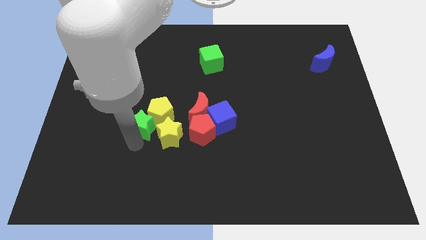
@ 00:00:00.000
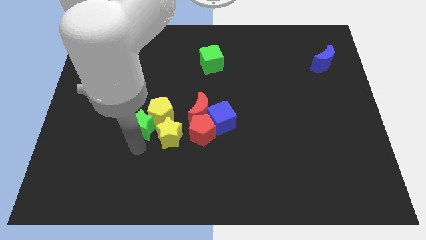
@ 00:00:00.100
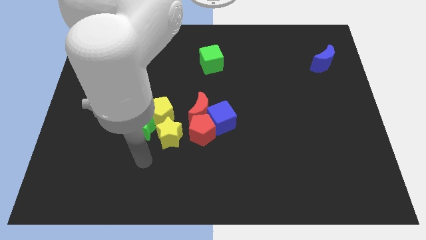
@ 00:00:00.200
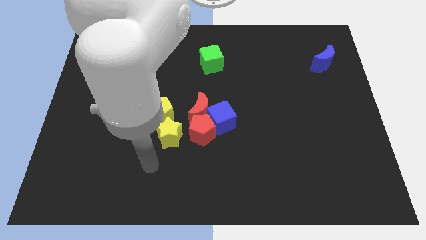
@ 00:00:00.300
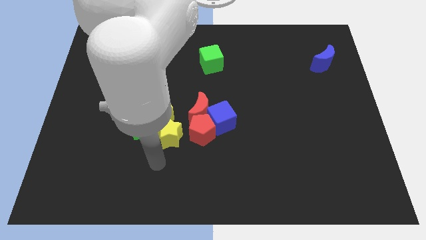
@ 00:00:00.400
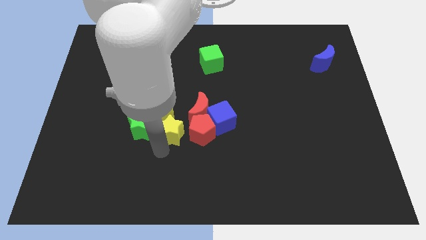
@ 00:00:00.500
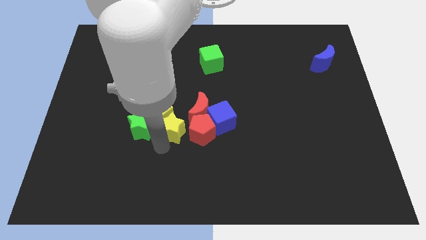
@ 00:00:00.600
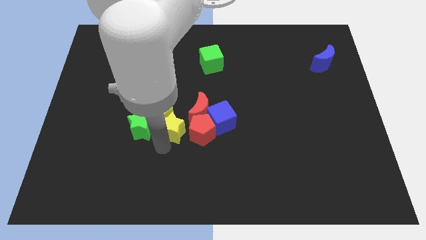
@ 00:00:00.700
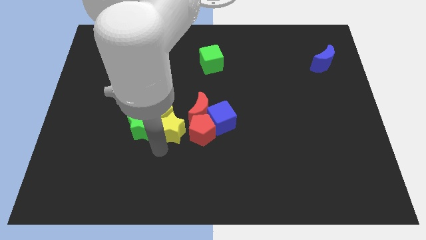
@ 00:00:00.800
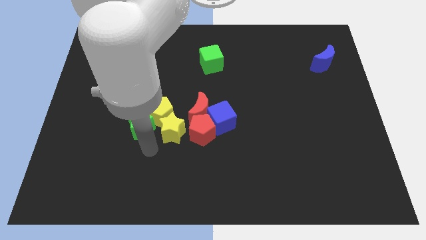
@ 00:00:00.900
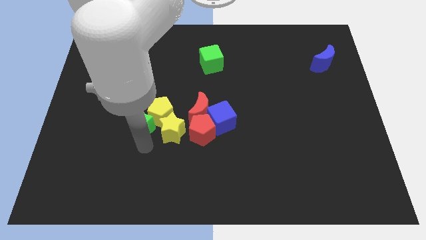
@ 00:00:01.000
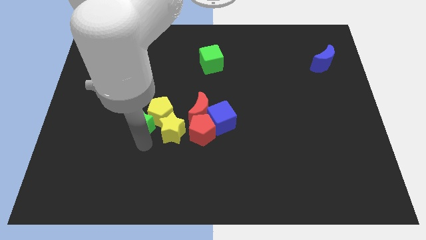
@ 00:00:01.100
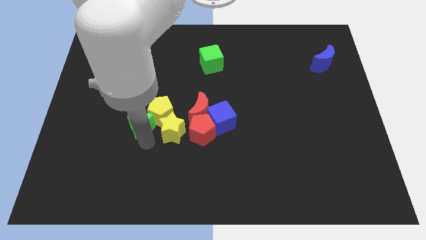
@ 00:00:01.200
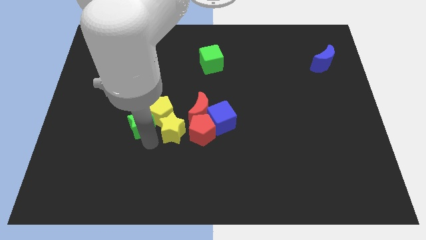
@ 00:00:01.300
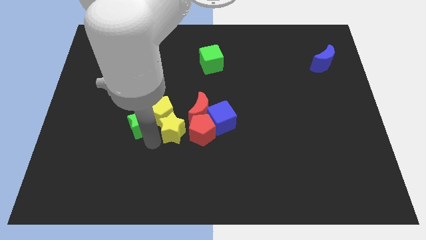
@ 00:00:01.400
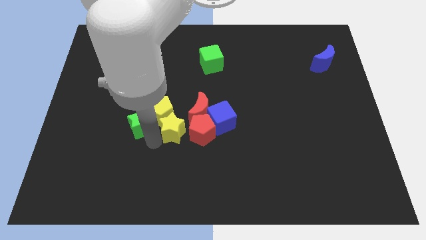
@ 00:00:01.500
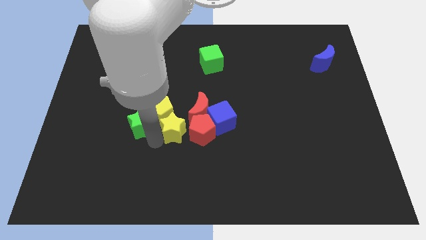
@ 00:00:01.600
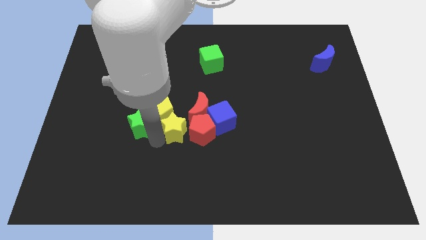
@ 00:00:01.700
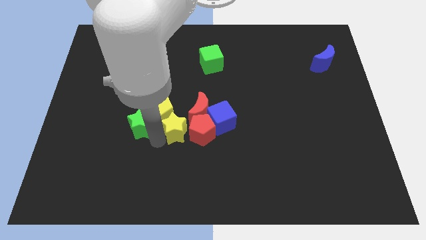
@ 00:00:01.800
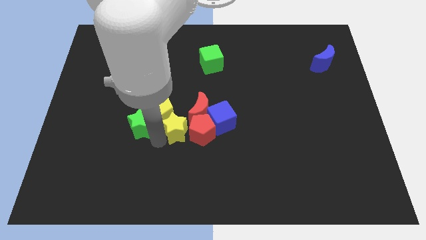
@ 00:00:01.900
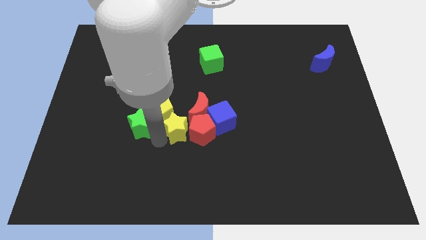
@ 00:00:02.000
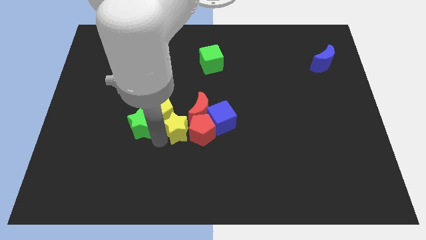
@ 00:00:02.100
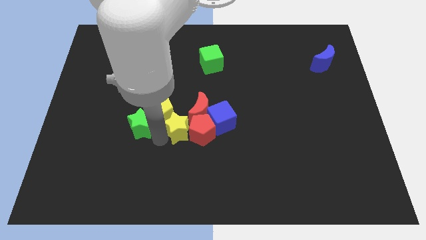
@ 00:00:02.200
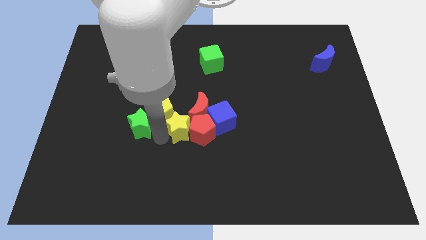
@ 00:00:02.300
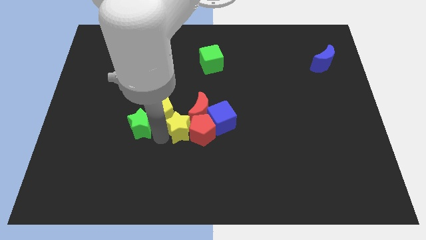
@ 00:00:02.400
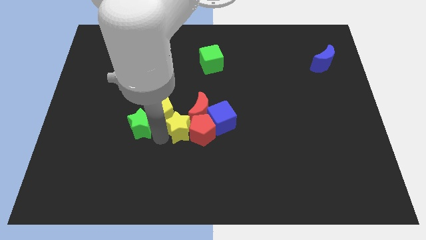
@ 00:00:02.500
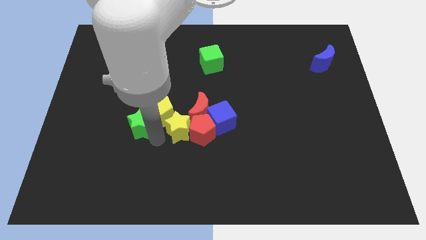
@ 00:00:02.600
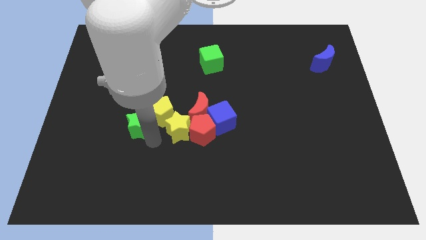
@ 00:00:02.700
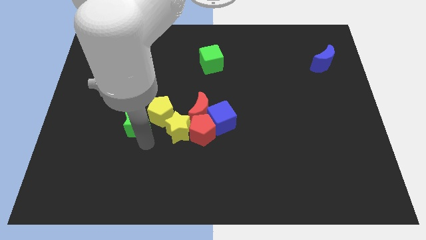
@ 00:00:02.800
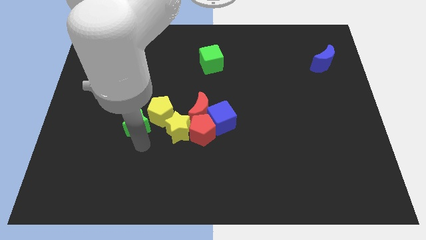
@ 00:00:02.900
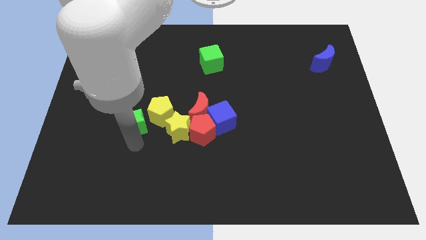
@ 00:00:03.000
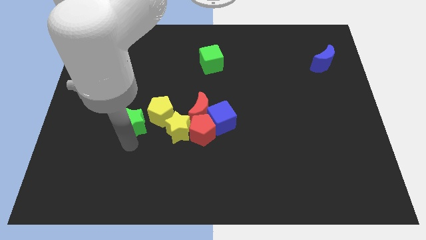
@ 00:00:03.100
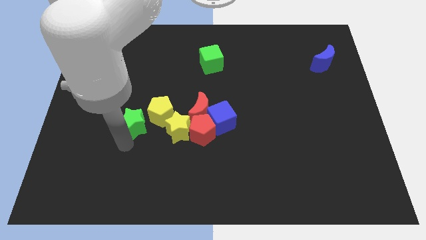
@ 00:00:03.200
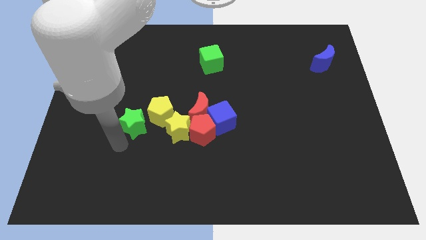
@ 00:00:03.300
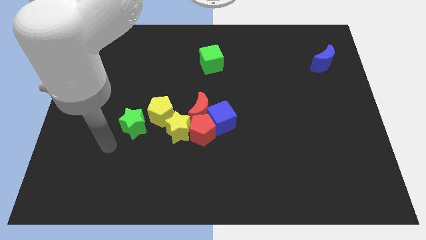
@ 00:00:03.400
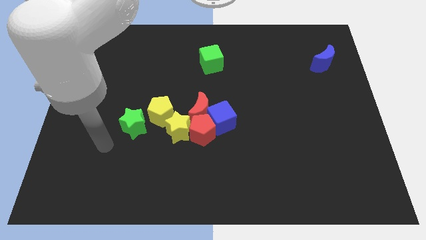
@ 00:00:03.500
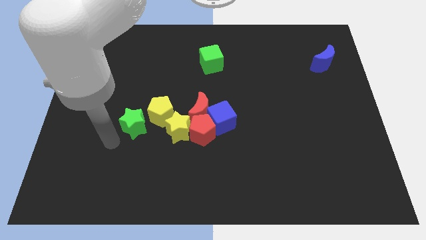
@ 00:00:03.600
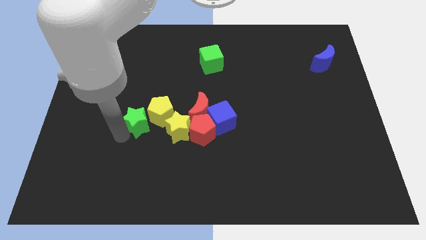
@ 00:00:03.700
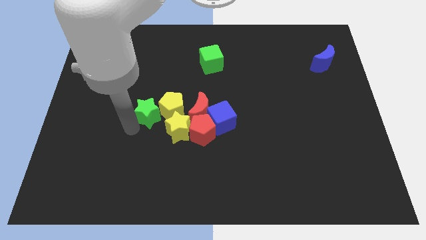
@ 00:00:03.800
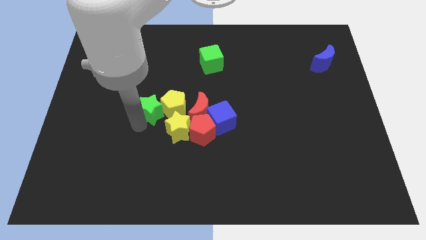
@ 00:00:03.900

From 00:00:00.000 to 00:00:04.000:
move green star close to yellow pentagon

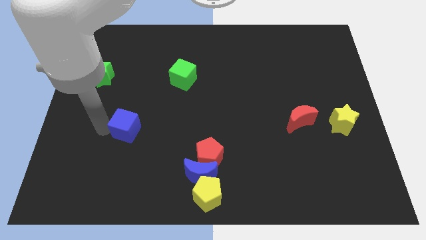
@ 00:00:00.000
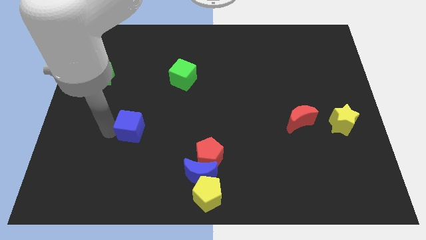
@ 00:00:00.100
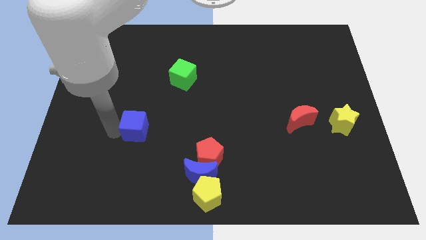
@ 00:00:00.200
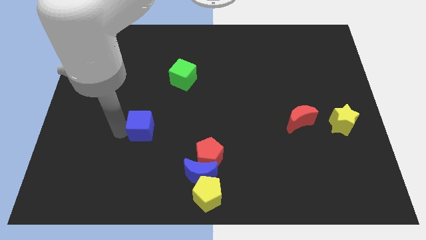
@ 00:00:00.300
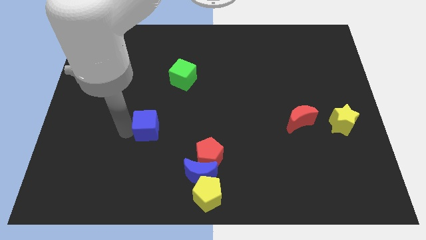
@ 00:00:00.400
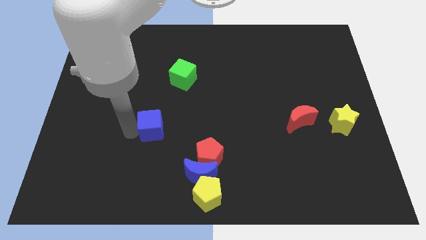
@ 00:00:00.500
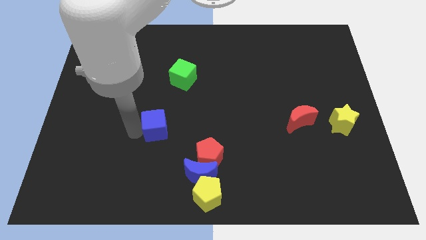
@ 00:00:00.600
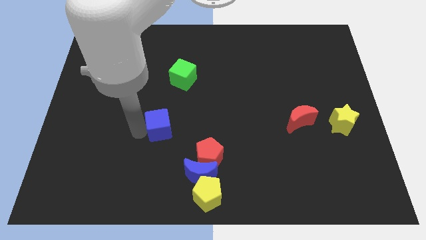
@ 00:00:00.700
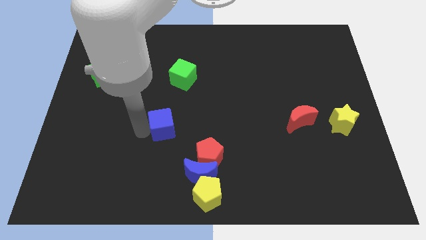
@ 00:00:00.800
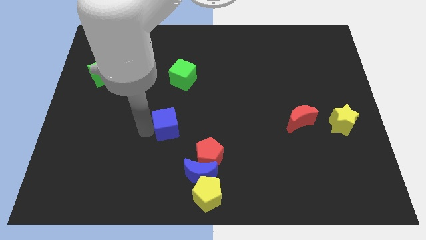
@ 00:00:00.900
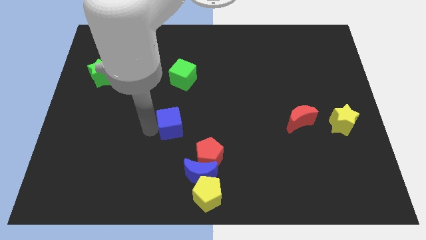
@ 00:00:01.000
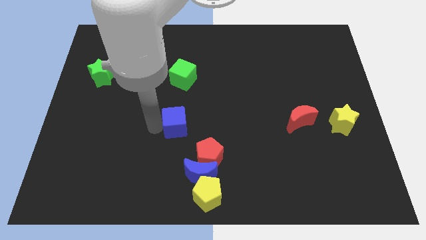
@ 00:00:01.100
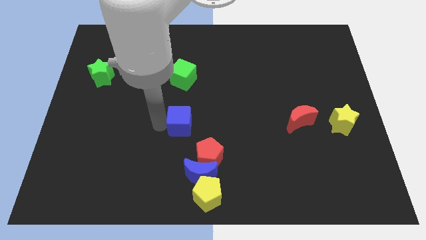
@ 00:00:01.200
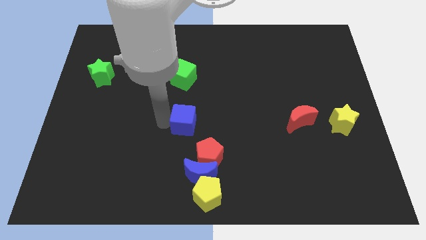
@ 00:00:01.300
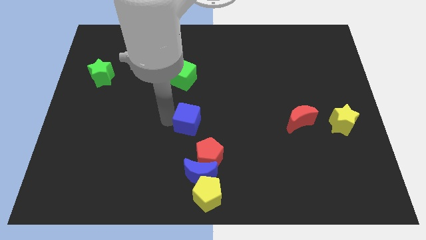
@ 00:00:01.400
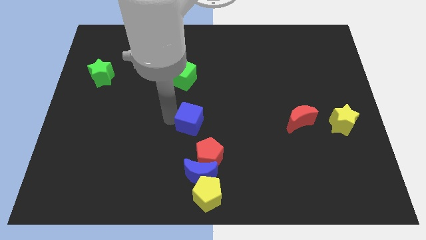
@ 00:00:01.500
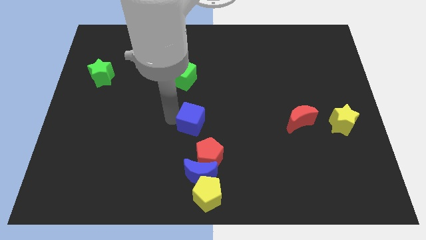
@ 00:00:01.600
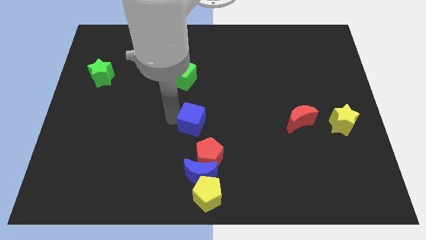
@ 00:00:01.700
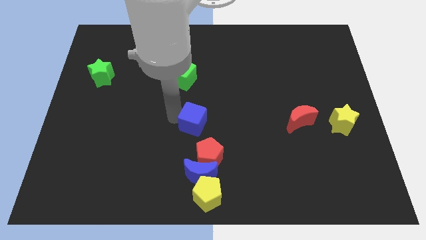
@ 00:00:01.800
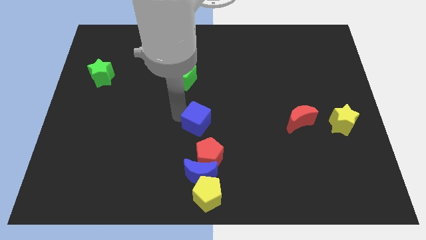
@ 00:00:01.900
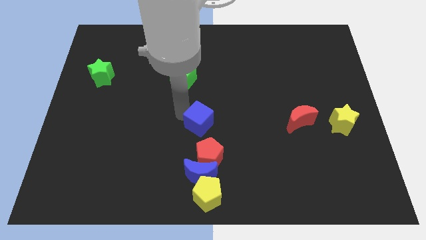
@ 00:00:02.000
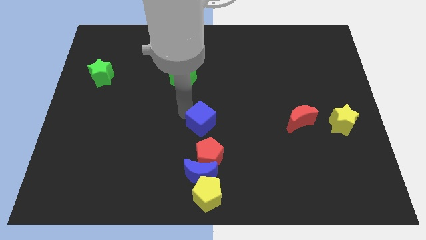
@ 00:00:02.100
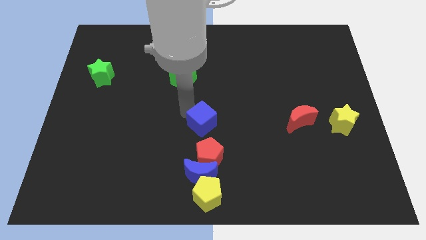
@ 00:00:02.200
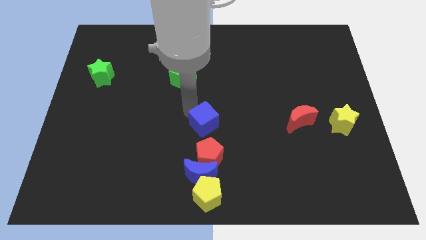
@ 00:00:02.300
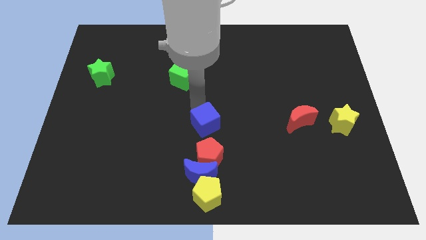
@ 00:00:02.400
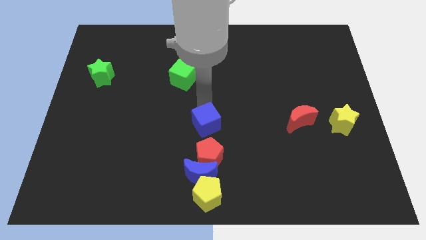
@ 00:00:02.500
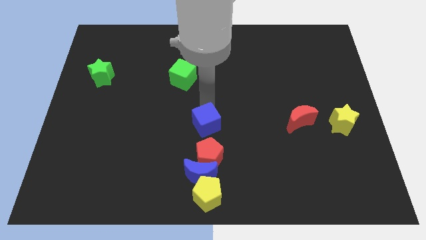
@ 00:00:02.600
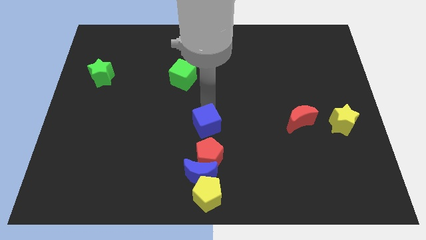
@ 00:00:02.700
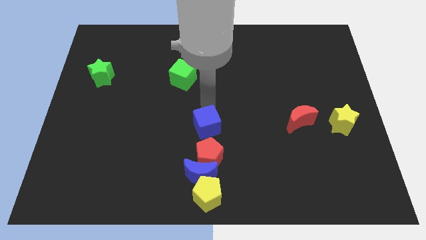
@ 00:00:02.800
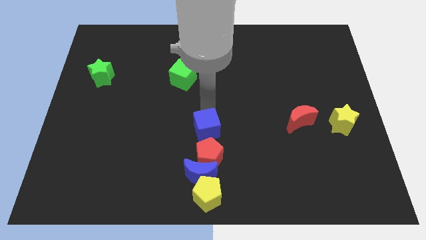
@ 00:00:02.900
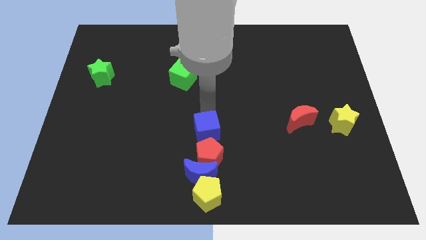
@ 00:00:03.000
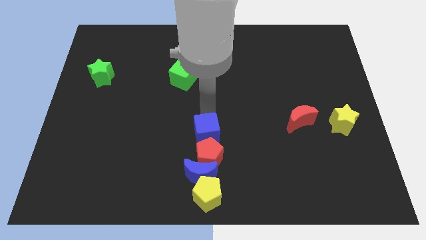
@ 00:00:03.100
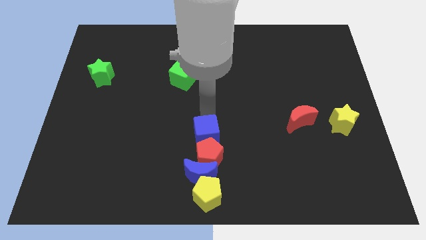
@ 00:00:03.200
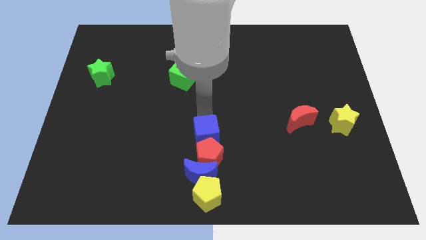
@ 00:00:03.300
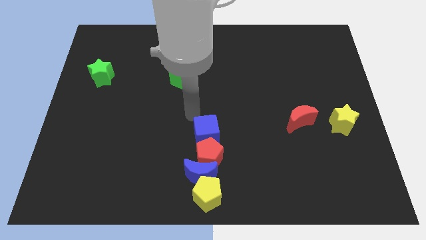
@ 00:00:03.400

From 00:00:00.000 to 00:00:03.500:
place blue cube upwards to the red pentagon

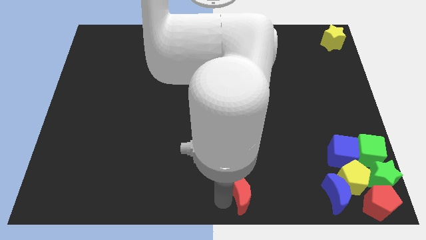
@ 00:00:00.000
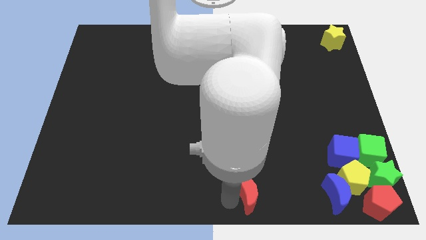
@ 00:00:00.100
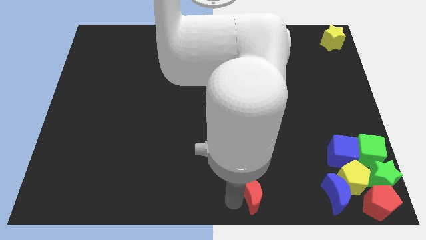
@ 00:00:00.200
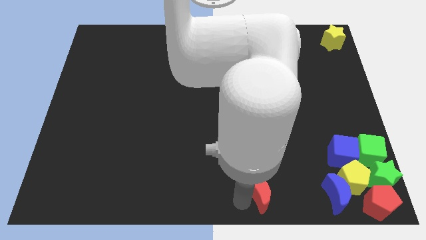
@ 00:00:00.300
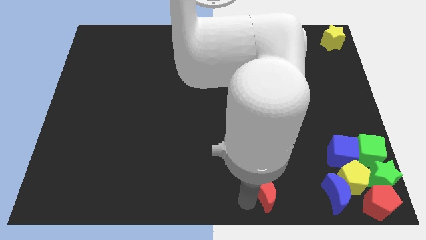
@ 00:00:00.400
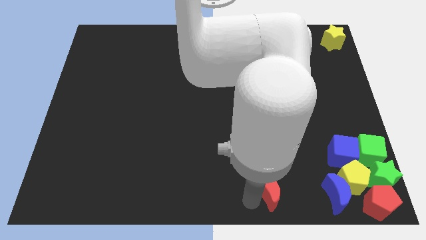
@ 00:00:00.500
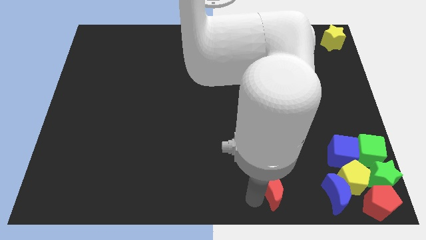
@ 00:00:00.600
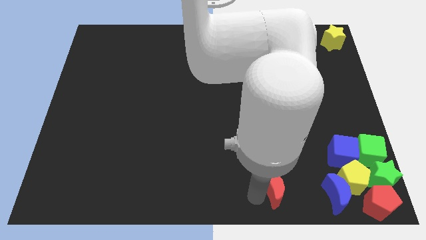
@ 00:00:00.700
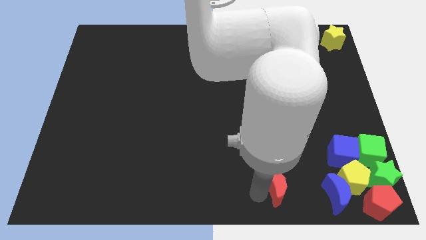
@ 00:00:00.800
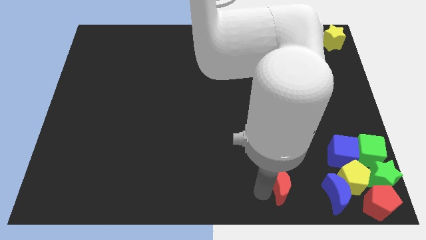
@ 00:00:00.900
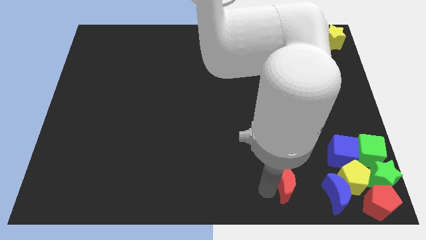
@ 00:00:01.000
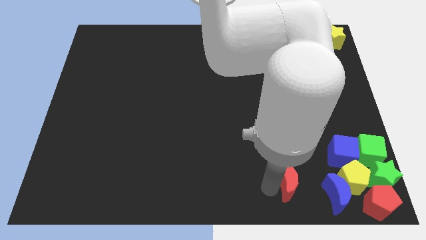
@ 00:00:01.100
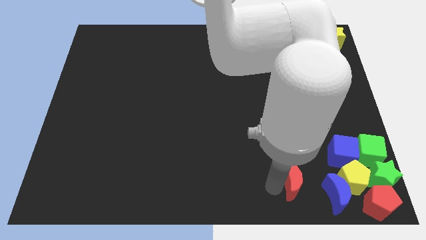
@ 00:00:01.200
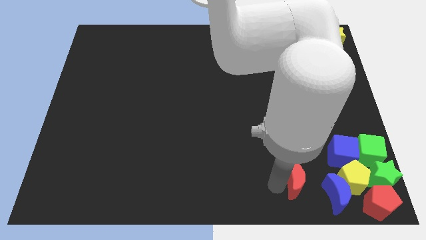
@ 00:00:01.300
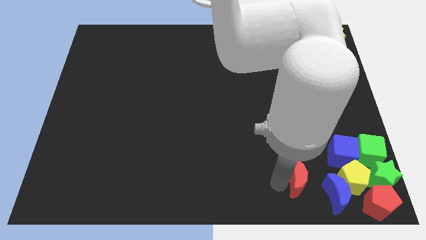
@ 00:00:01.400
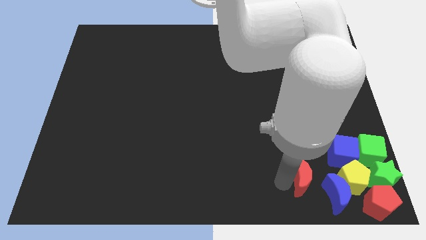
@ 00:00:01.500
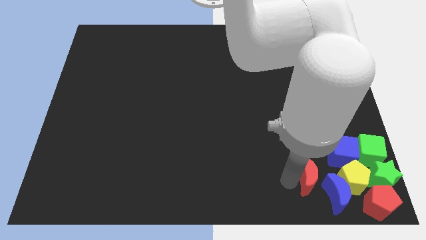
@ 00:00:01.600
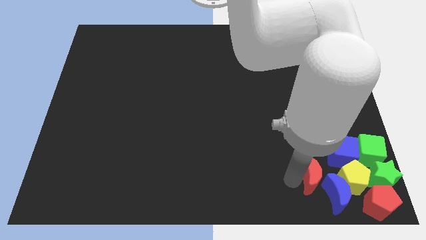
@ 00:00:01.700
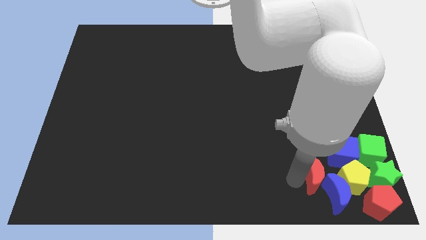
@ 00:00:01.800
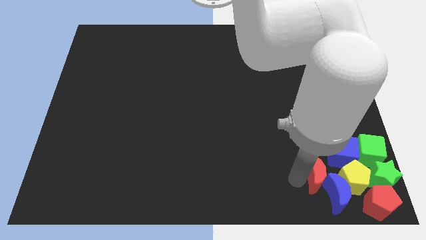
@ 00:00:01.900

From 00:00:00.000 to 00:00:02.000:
move the red moon into the group of blocks
